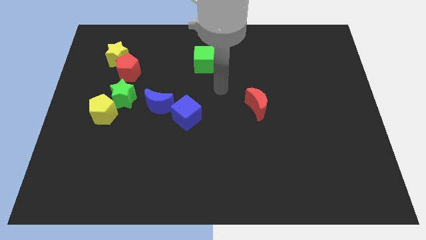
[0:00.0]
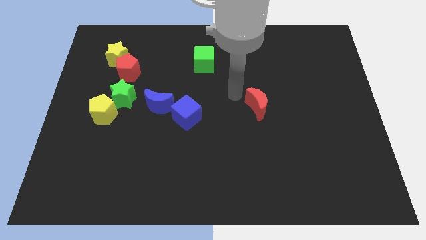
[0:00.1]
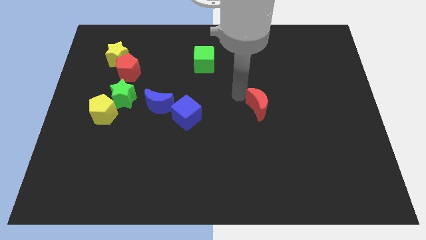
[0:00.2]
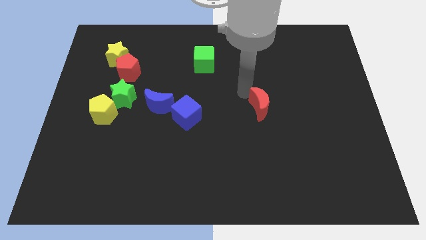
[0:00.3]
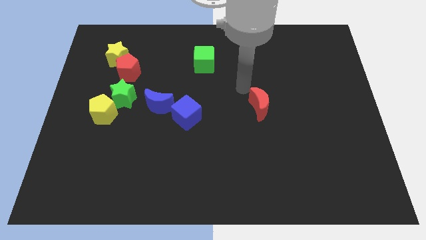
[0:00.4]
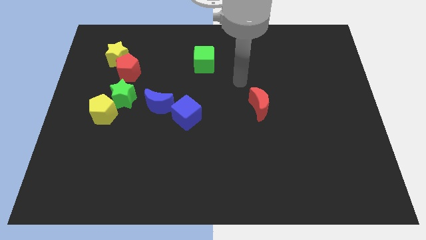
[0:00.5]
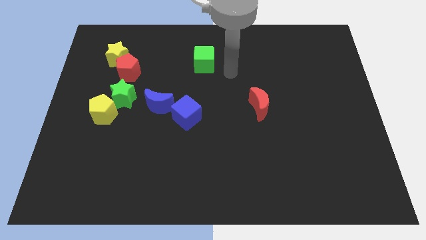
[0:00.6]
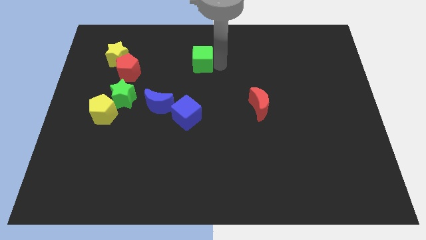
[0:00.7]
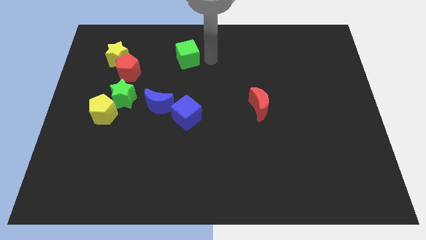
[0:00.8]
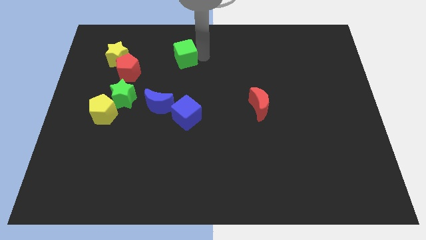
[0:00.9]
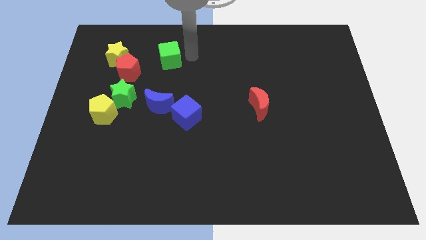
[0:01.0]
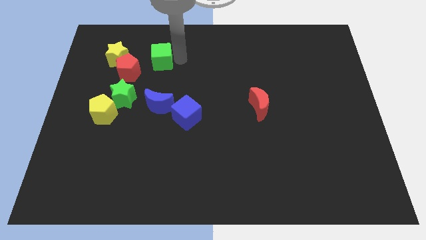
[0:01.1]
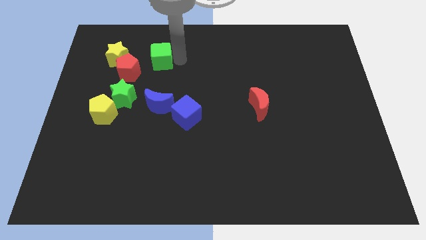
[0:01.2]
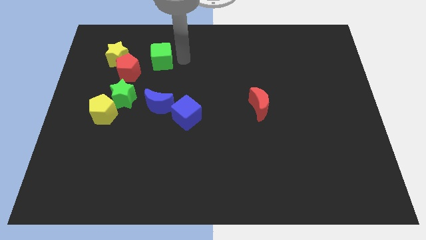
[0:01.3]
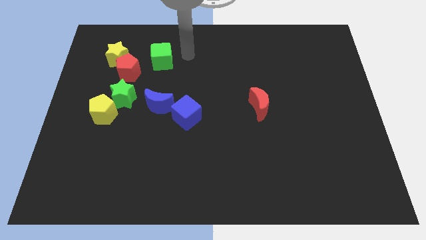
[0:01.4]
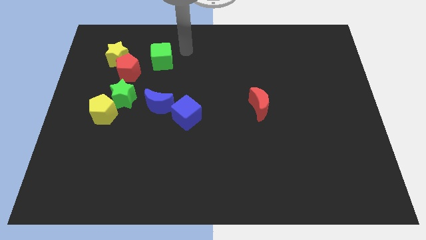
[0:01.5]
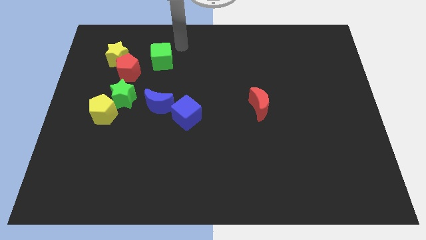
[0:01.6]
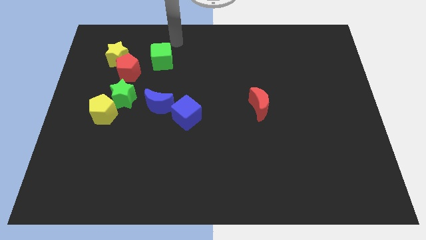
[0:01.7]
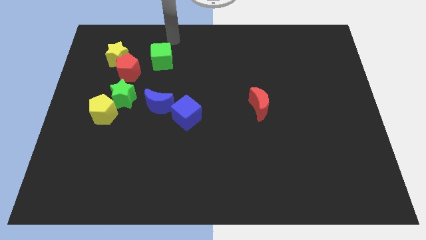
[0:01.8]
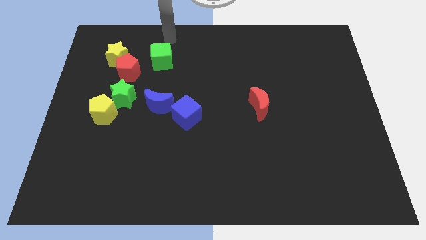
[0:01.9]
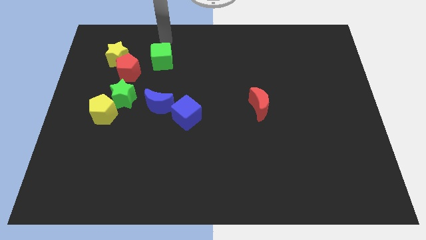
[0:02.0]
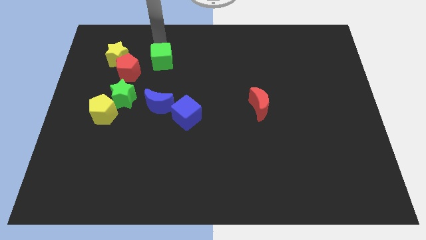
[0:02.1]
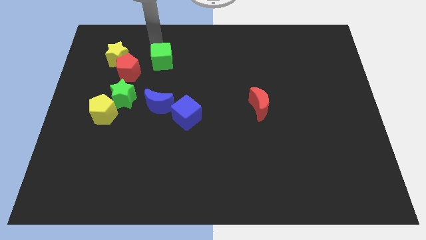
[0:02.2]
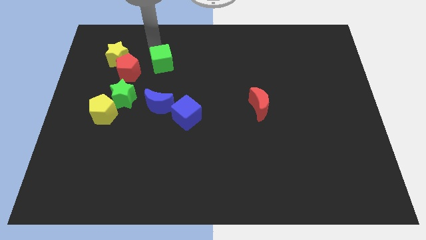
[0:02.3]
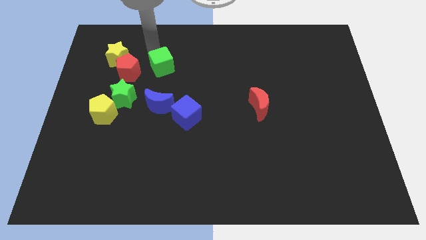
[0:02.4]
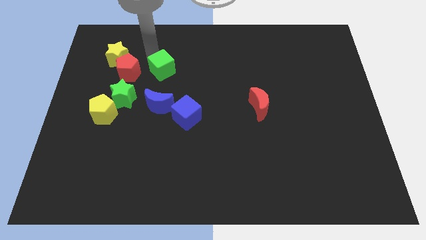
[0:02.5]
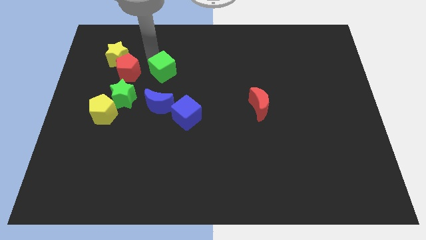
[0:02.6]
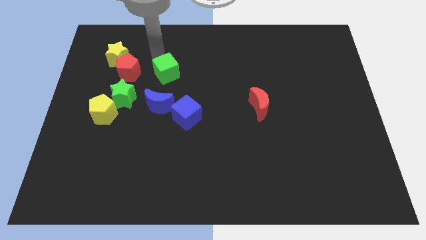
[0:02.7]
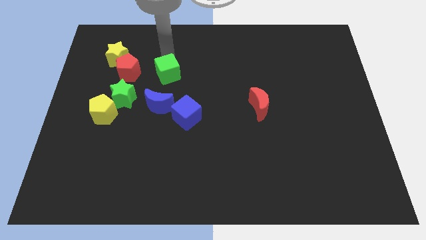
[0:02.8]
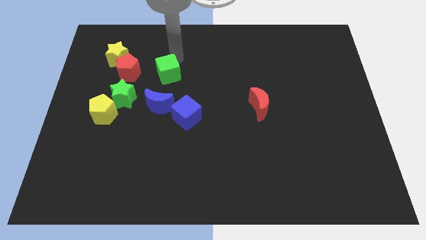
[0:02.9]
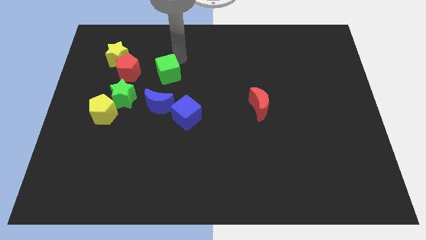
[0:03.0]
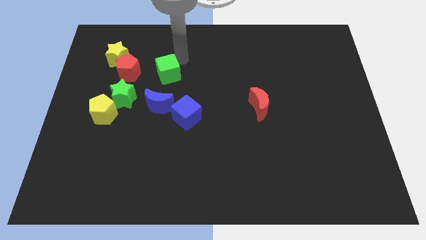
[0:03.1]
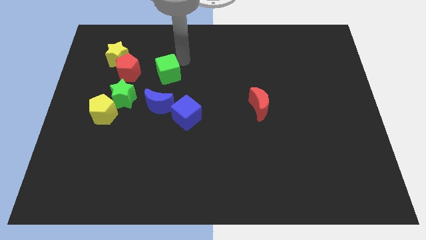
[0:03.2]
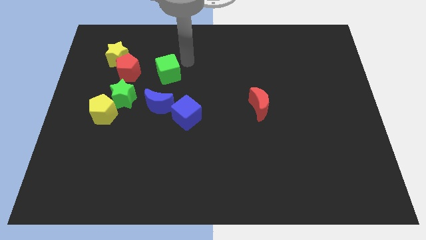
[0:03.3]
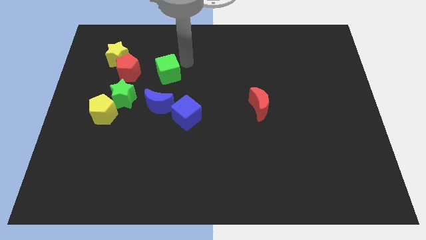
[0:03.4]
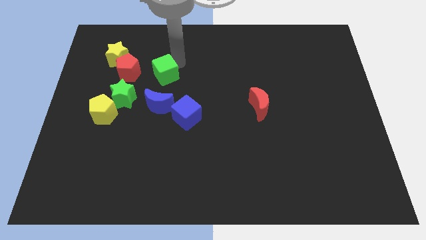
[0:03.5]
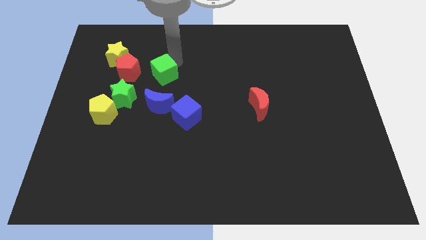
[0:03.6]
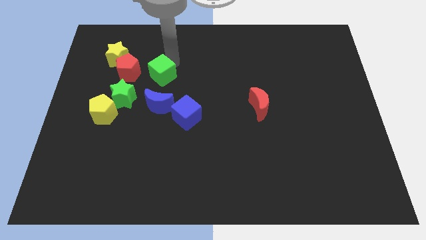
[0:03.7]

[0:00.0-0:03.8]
place the green cube to the top of the blue moon

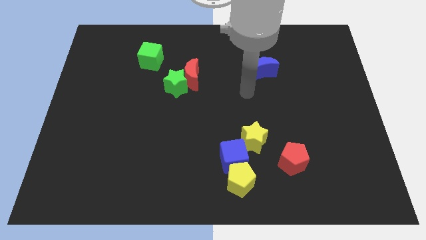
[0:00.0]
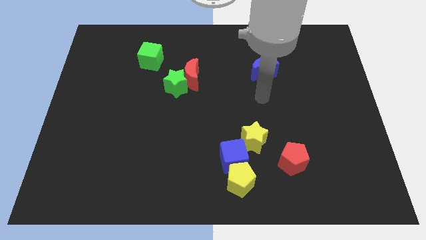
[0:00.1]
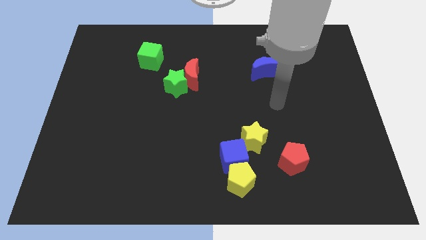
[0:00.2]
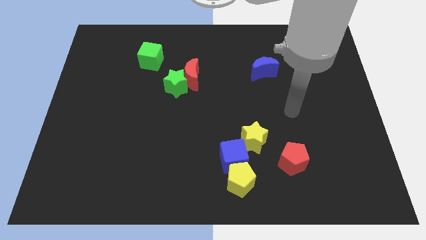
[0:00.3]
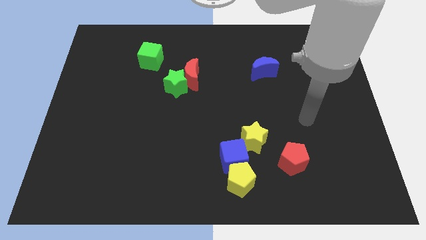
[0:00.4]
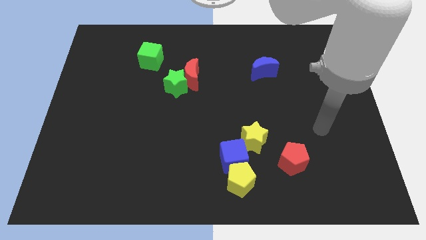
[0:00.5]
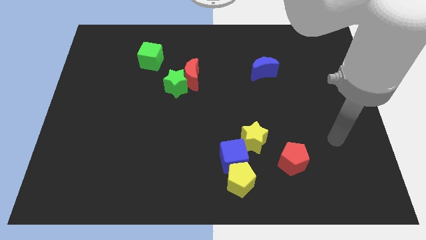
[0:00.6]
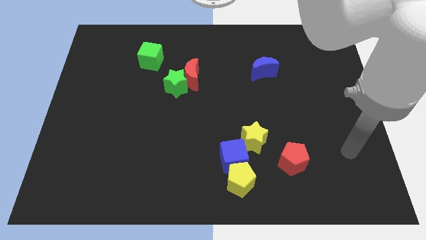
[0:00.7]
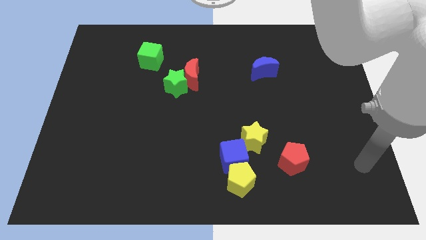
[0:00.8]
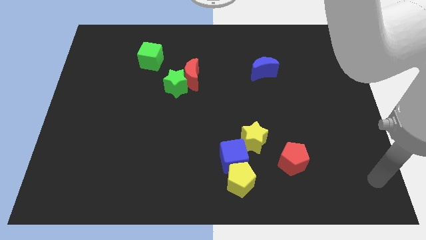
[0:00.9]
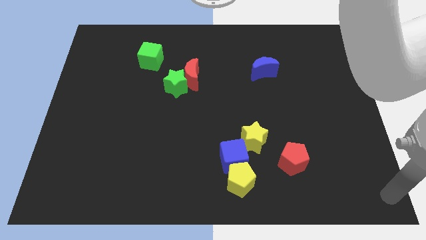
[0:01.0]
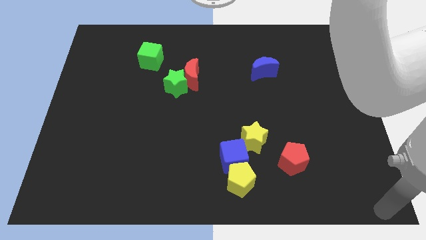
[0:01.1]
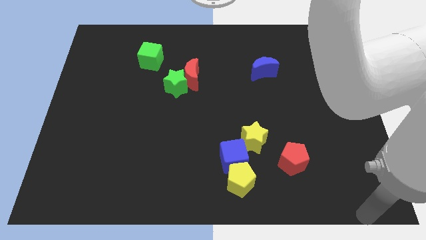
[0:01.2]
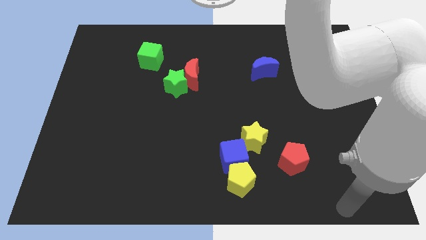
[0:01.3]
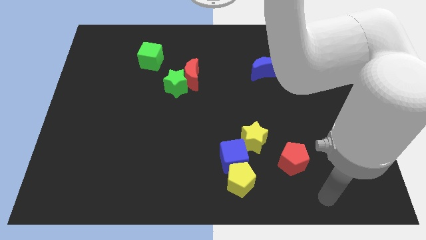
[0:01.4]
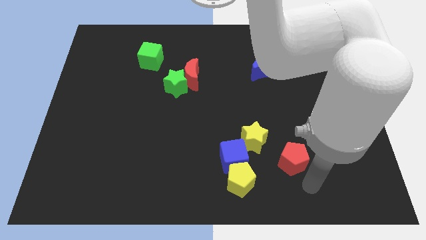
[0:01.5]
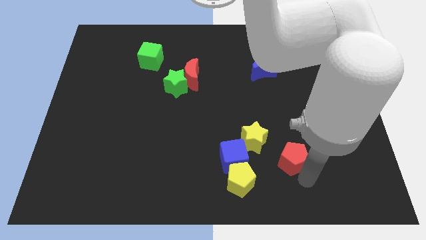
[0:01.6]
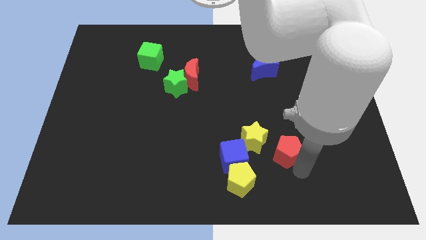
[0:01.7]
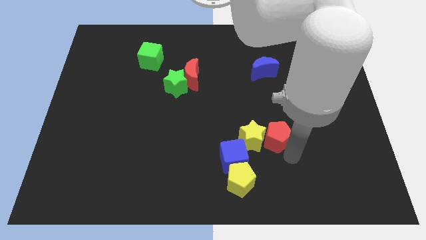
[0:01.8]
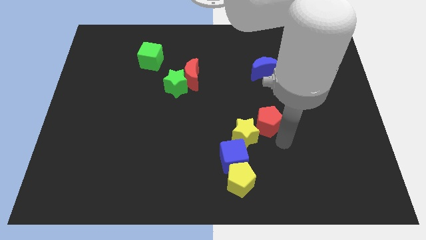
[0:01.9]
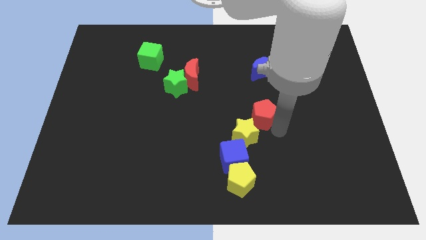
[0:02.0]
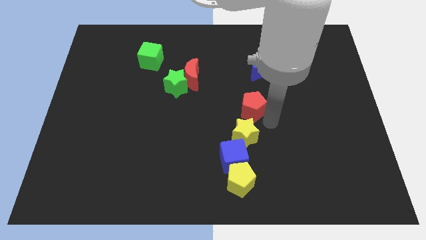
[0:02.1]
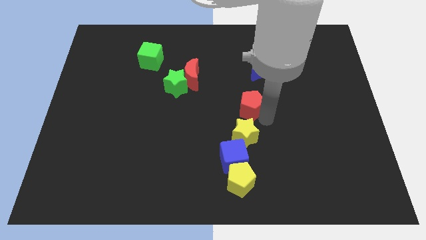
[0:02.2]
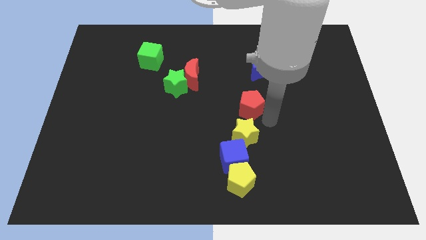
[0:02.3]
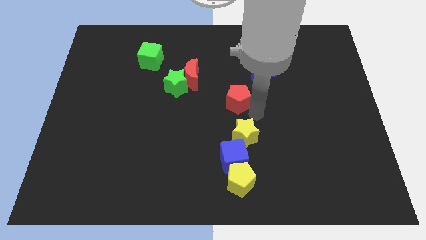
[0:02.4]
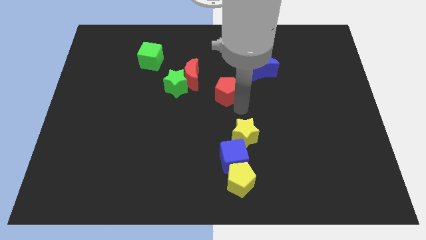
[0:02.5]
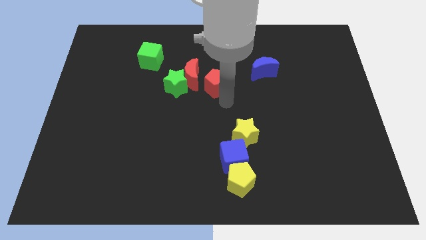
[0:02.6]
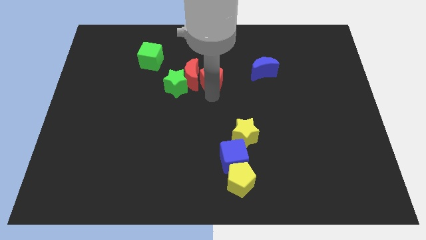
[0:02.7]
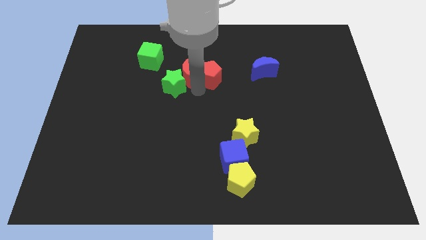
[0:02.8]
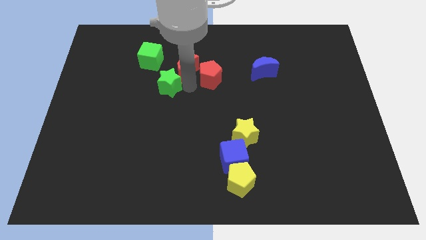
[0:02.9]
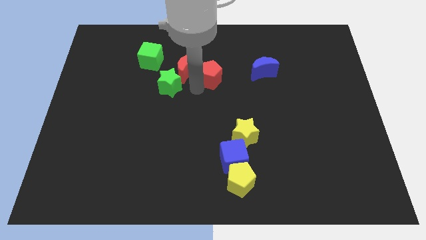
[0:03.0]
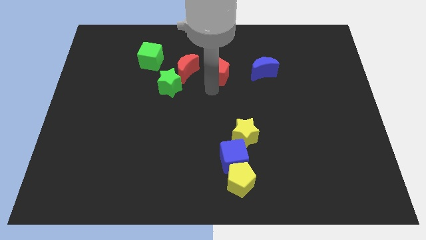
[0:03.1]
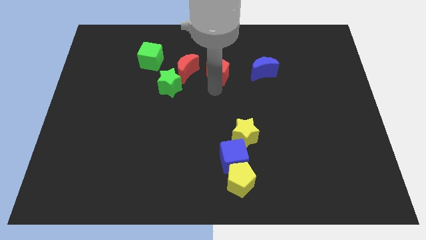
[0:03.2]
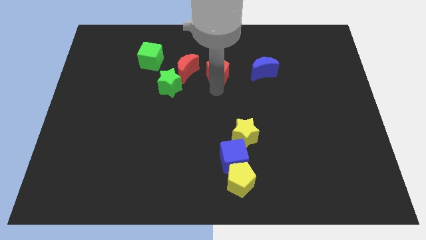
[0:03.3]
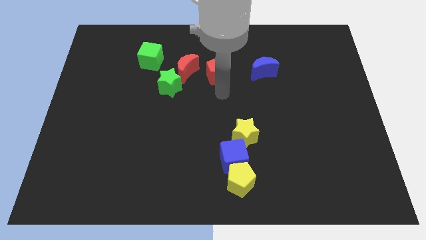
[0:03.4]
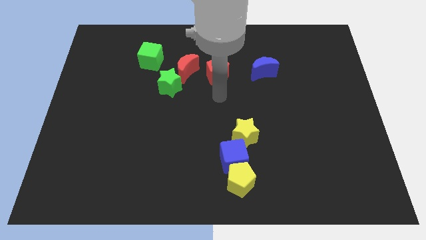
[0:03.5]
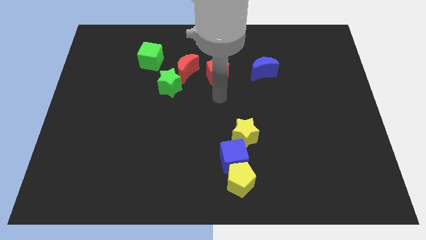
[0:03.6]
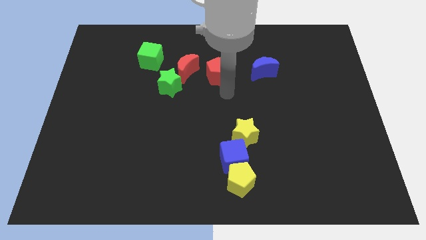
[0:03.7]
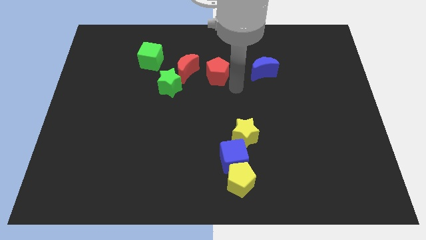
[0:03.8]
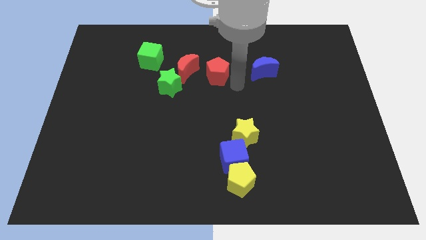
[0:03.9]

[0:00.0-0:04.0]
push the red pentagon to the left of the blue crescent

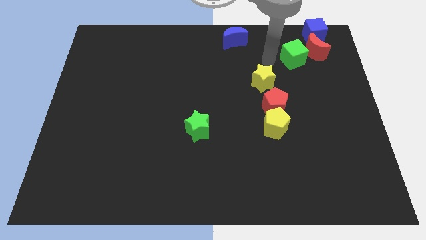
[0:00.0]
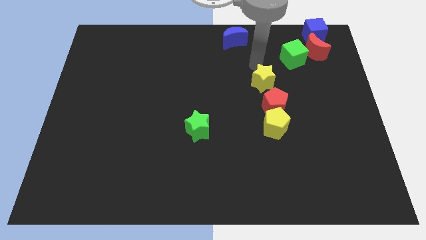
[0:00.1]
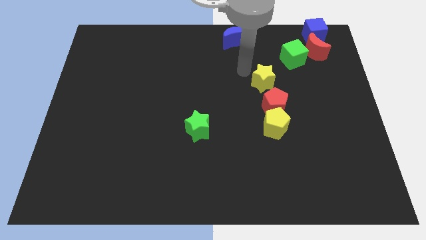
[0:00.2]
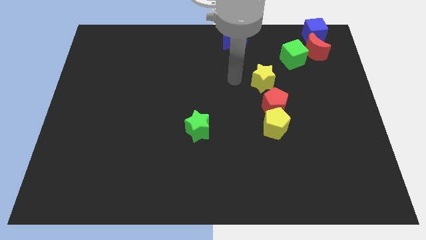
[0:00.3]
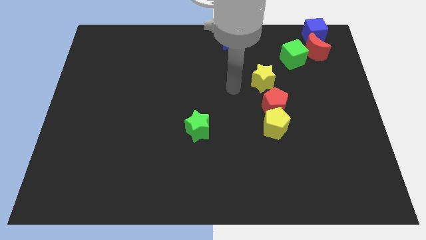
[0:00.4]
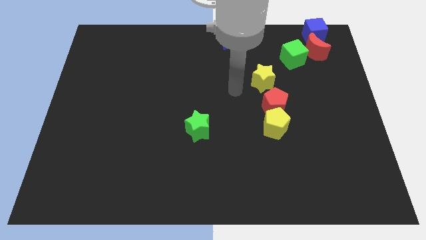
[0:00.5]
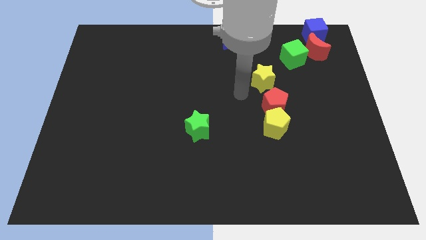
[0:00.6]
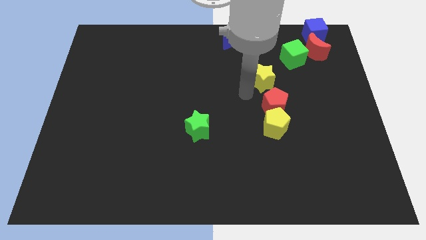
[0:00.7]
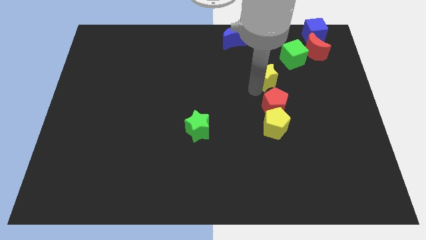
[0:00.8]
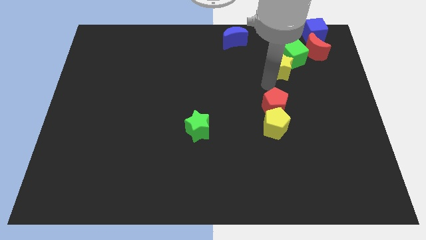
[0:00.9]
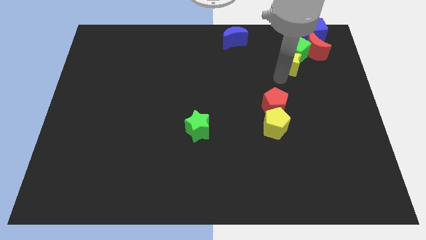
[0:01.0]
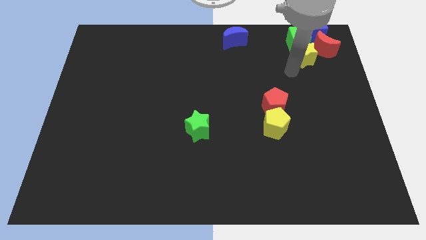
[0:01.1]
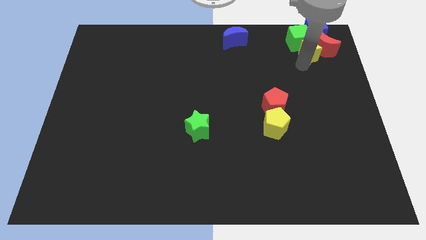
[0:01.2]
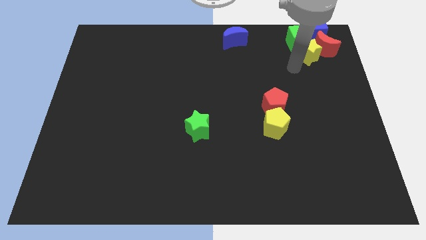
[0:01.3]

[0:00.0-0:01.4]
push the yellow star towards the top right corner
